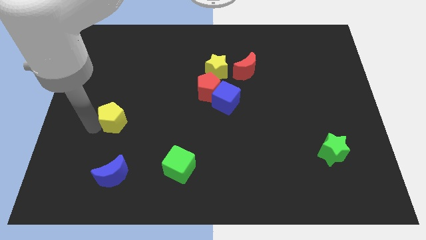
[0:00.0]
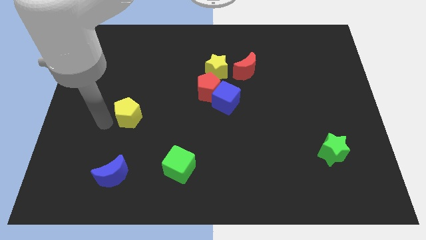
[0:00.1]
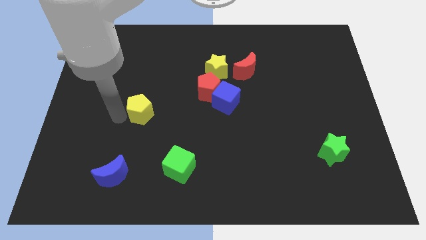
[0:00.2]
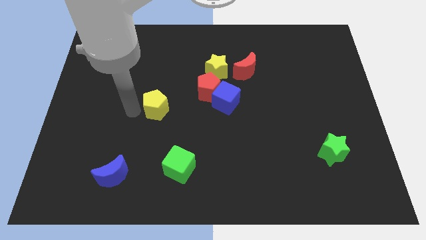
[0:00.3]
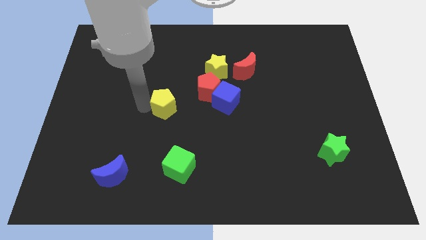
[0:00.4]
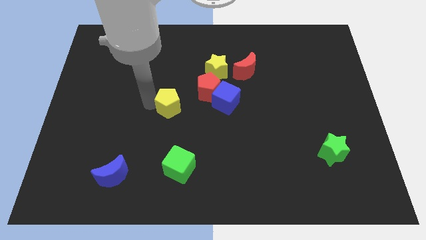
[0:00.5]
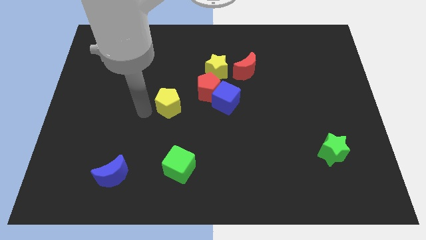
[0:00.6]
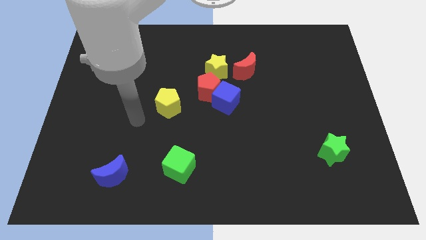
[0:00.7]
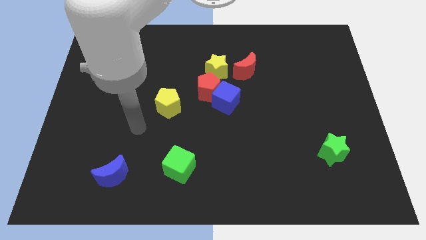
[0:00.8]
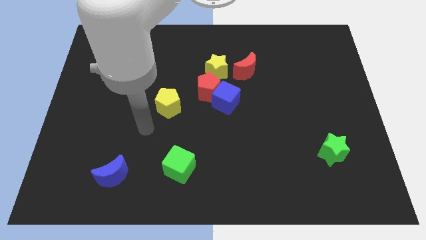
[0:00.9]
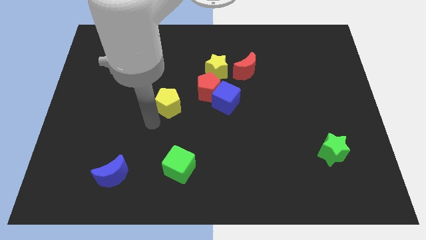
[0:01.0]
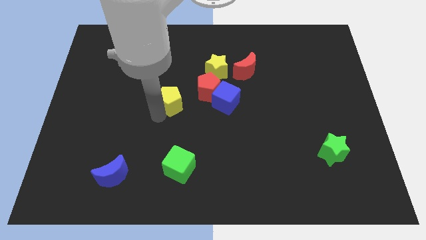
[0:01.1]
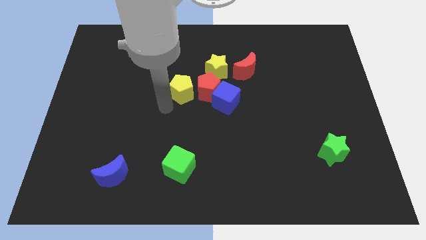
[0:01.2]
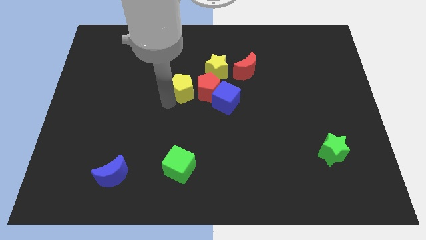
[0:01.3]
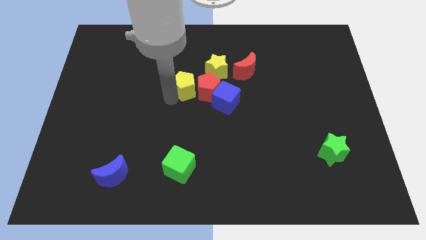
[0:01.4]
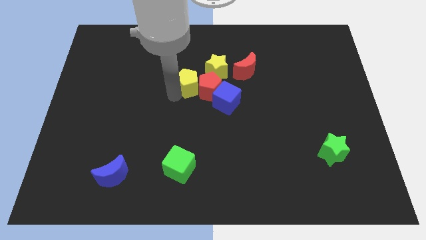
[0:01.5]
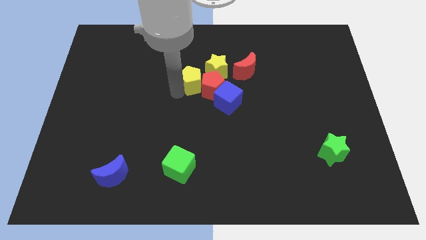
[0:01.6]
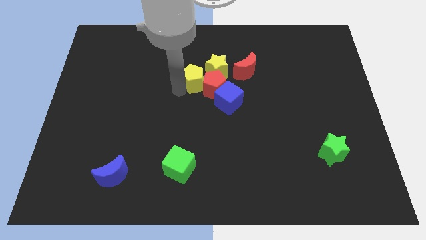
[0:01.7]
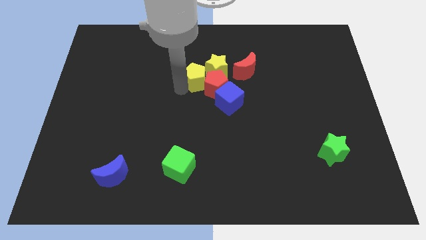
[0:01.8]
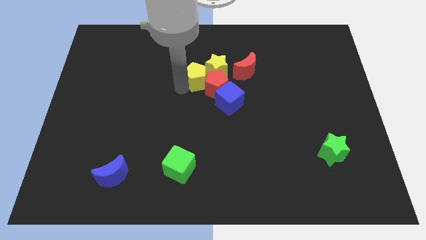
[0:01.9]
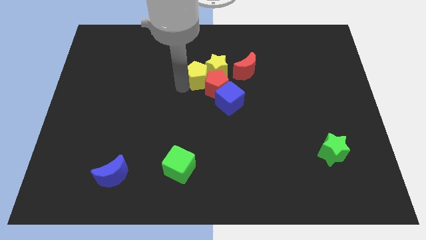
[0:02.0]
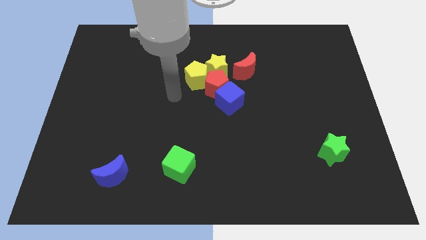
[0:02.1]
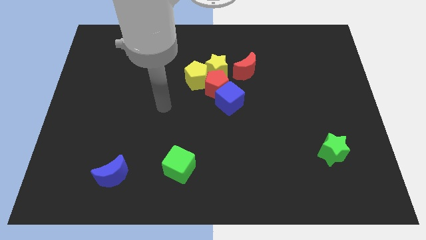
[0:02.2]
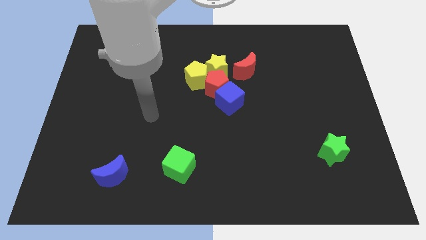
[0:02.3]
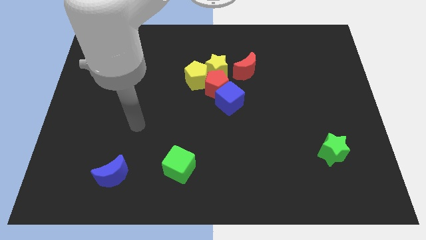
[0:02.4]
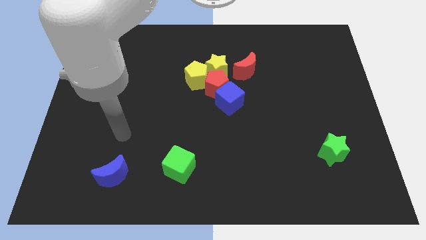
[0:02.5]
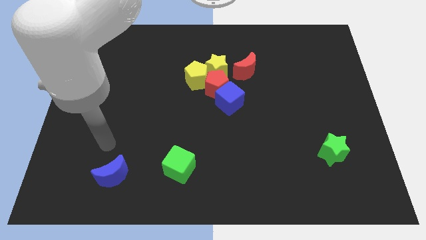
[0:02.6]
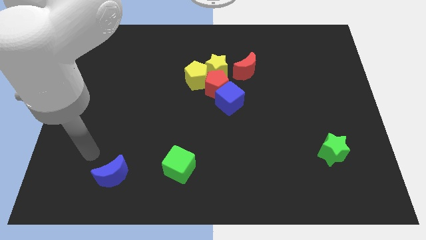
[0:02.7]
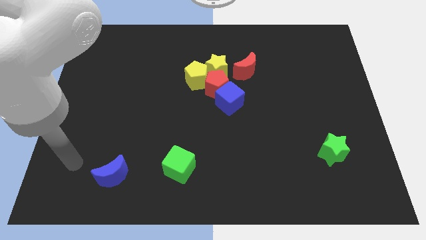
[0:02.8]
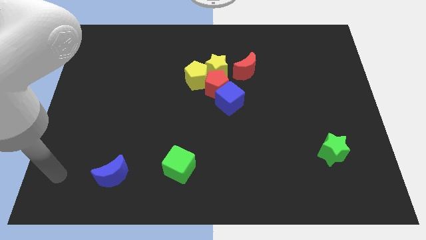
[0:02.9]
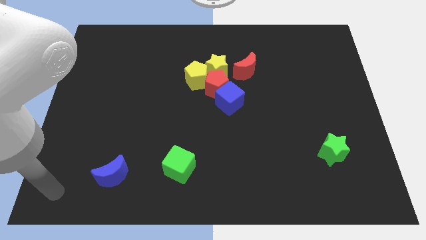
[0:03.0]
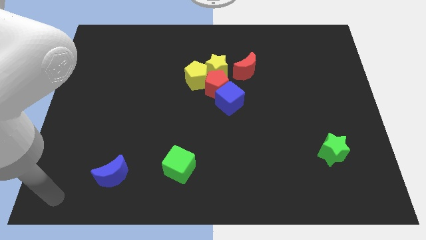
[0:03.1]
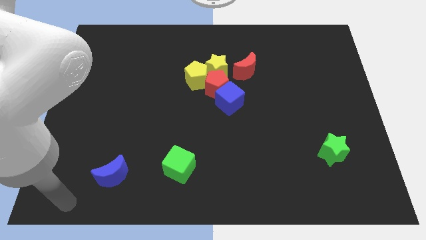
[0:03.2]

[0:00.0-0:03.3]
move the yellow pentagon closer to the yellow star

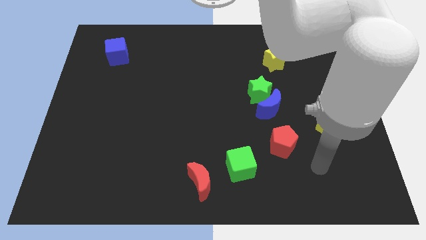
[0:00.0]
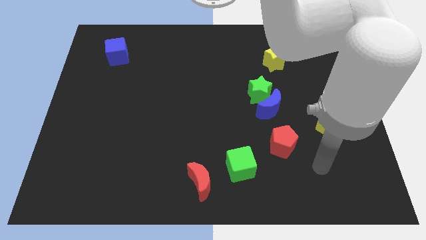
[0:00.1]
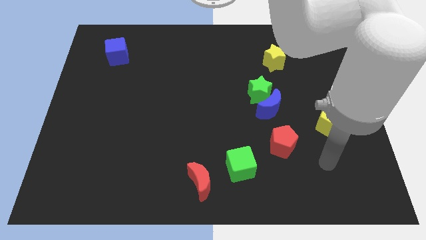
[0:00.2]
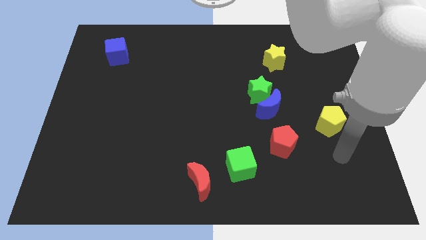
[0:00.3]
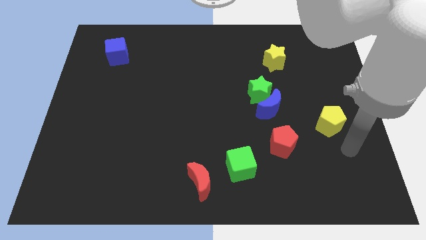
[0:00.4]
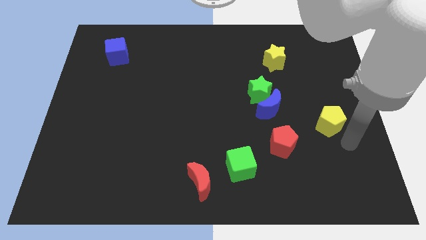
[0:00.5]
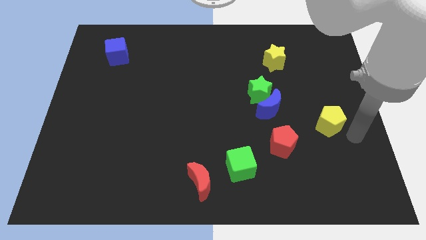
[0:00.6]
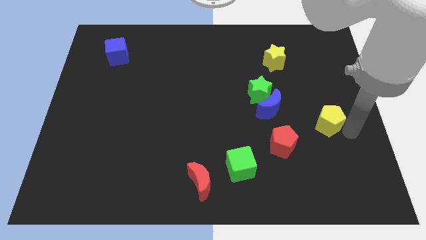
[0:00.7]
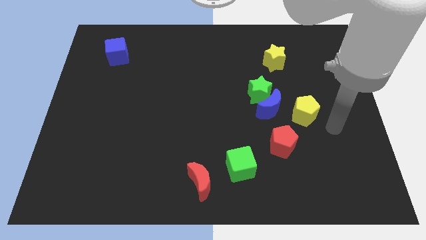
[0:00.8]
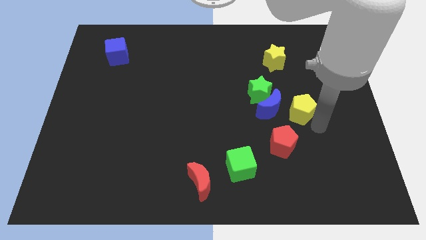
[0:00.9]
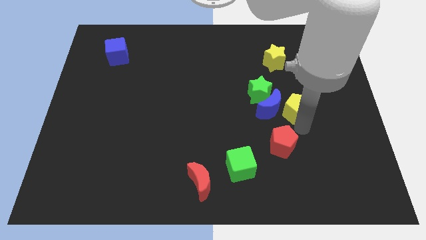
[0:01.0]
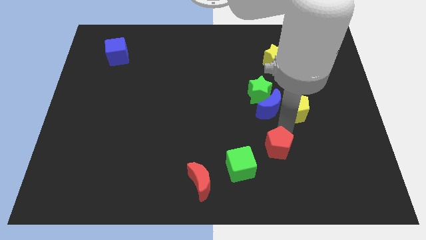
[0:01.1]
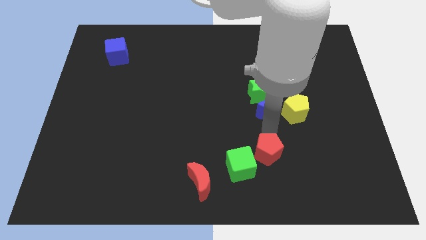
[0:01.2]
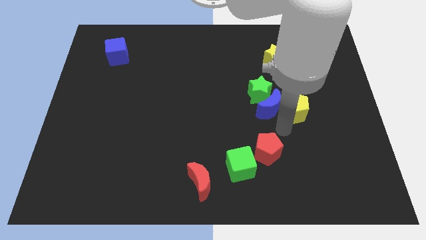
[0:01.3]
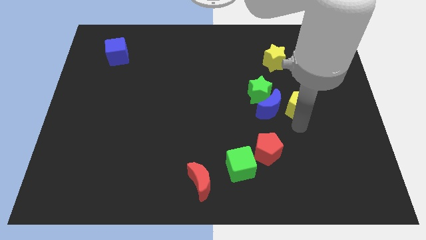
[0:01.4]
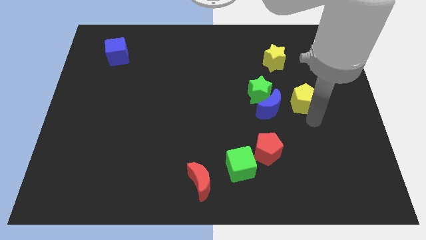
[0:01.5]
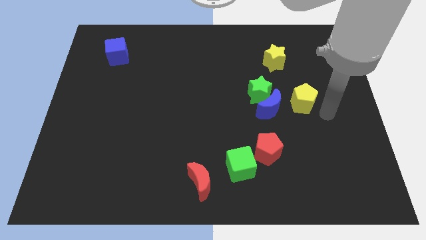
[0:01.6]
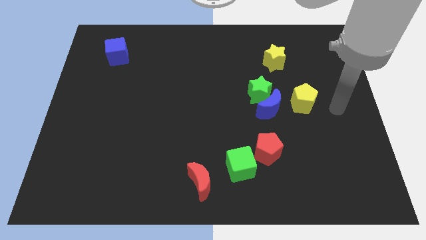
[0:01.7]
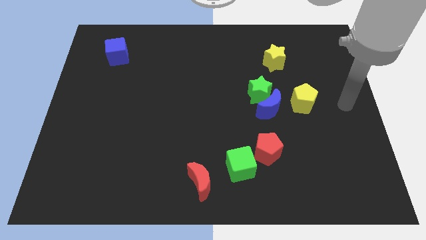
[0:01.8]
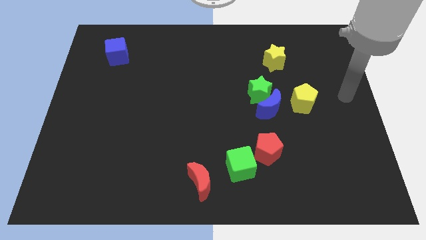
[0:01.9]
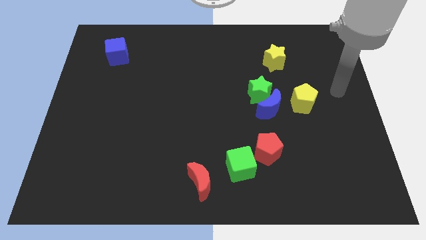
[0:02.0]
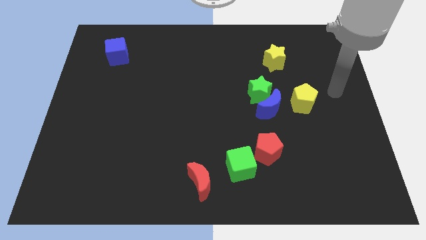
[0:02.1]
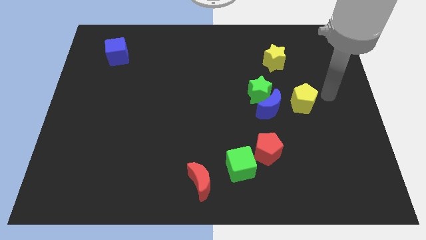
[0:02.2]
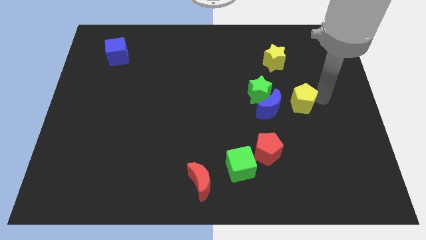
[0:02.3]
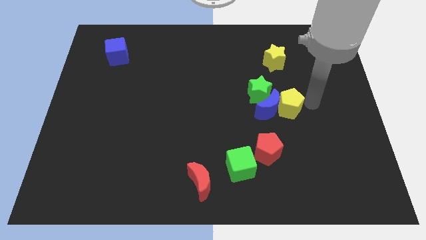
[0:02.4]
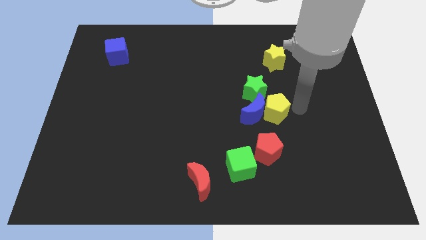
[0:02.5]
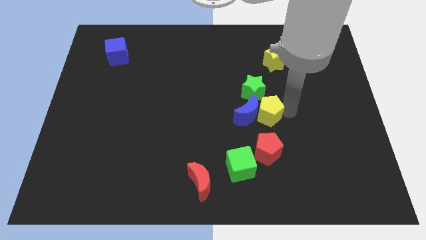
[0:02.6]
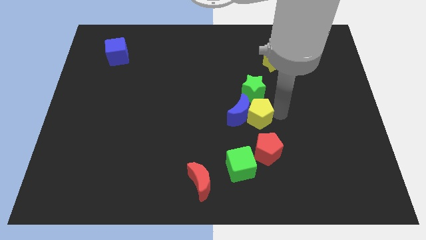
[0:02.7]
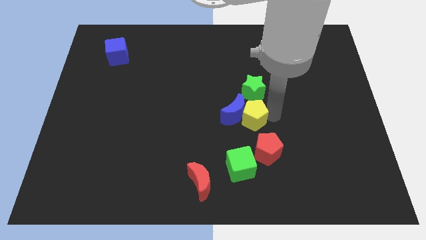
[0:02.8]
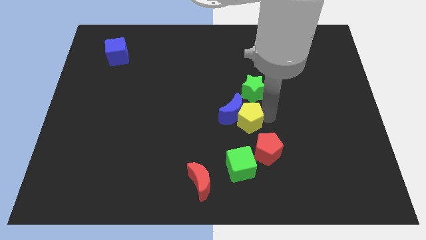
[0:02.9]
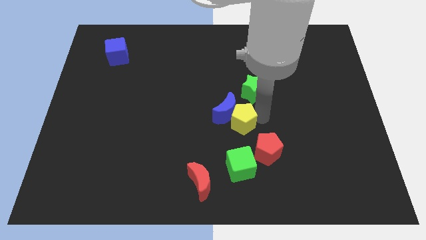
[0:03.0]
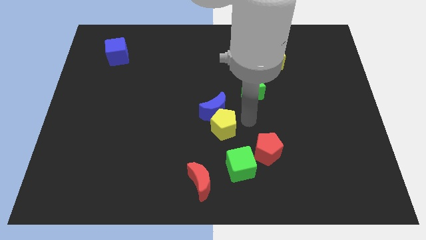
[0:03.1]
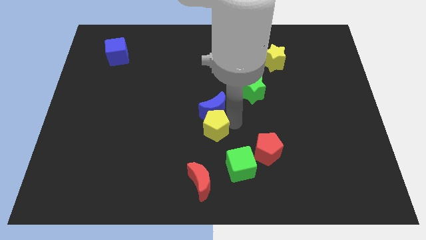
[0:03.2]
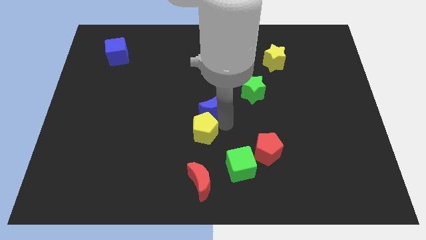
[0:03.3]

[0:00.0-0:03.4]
push the yellow pentagon into the blue moon

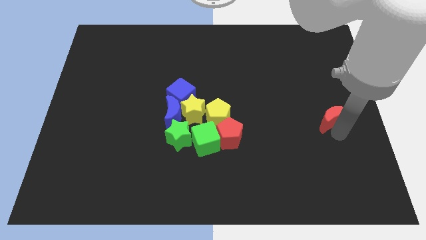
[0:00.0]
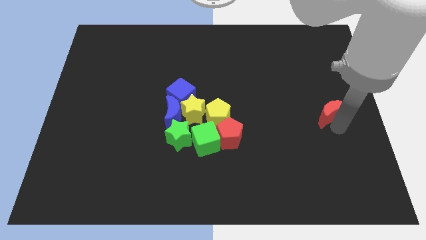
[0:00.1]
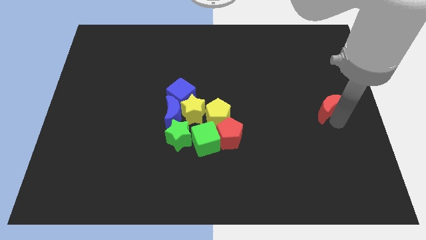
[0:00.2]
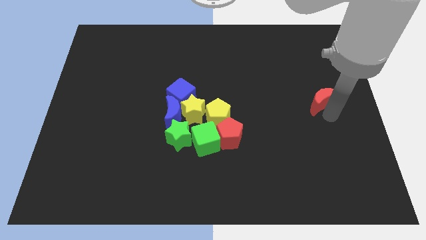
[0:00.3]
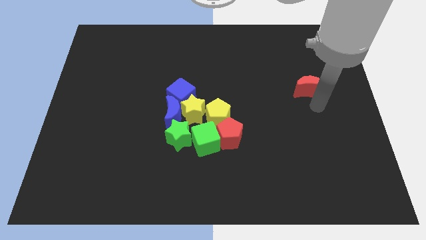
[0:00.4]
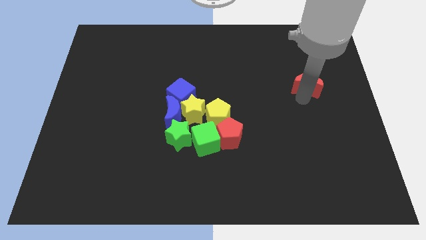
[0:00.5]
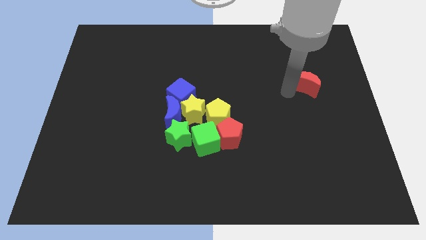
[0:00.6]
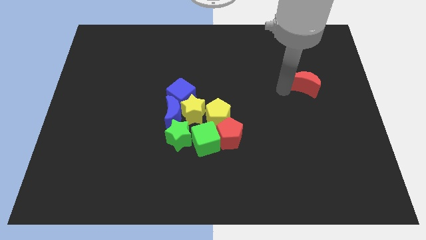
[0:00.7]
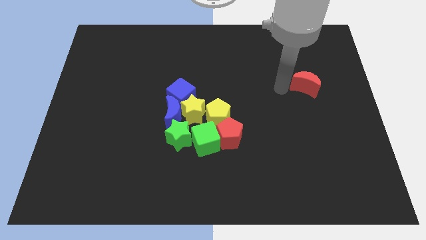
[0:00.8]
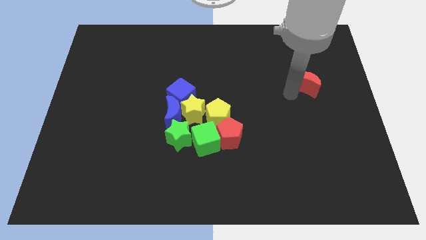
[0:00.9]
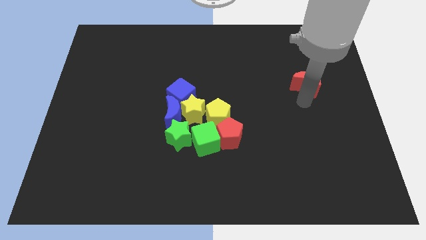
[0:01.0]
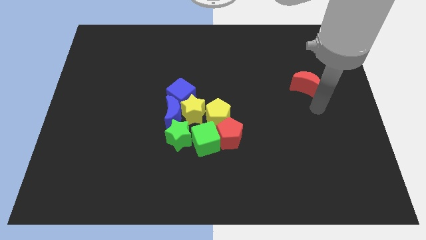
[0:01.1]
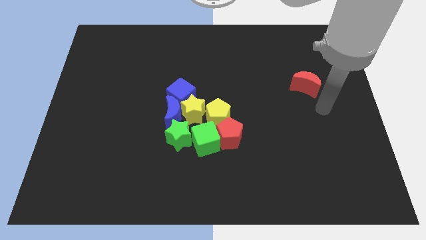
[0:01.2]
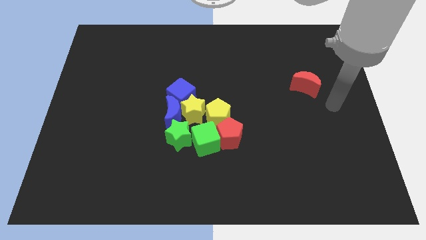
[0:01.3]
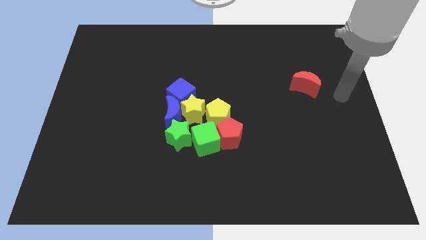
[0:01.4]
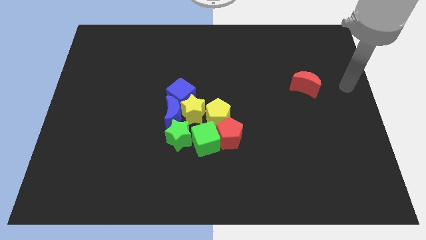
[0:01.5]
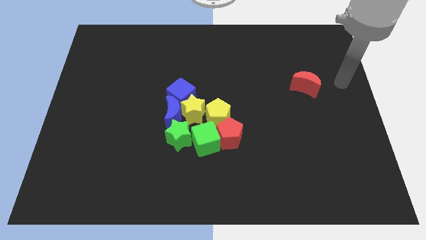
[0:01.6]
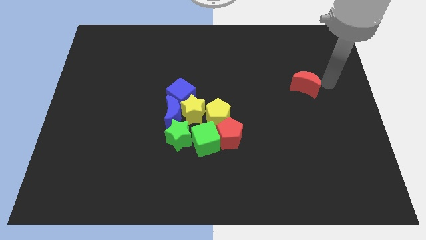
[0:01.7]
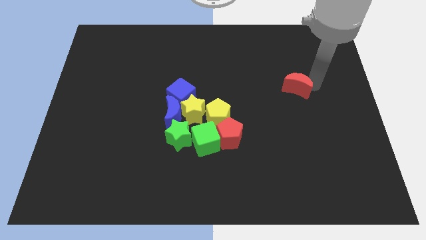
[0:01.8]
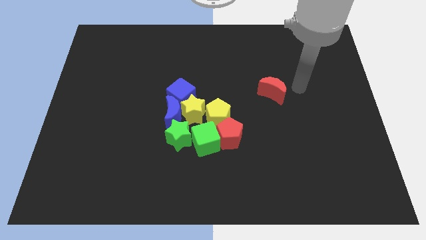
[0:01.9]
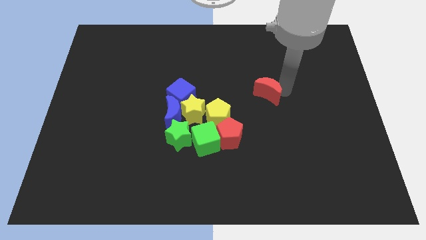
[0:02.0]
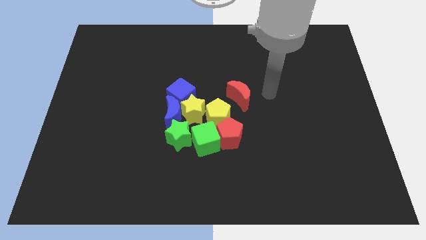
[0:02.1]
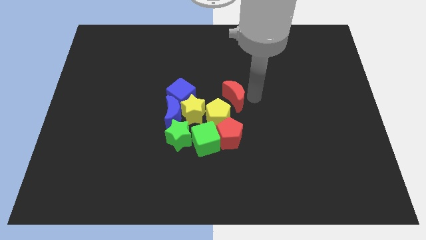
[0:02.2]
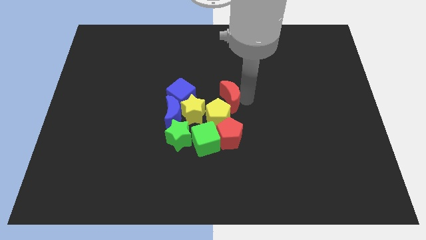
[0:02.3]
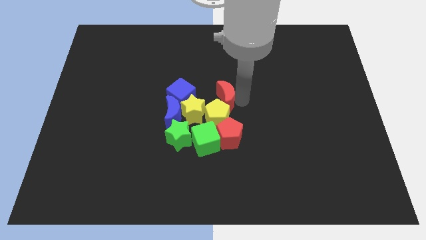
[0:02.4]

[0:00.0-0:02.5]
place red crescent near yellow pentagon
